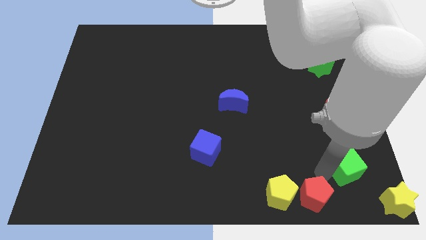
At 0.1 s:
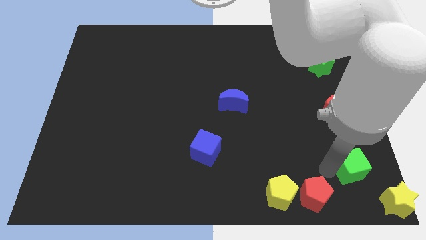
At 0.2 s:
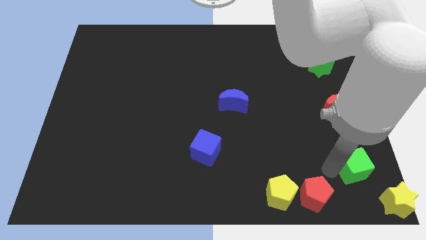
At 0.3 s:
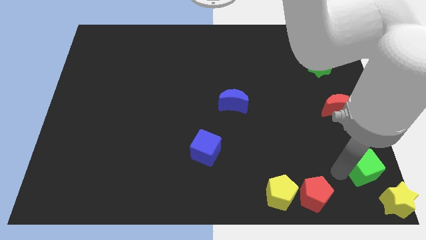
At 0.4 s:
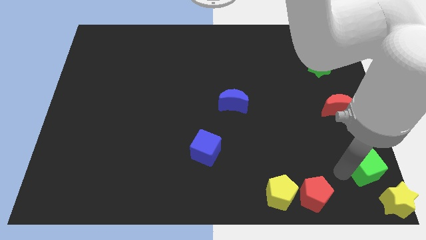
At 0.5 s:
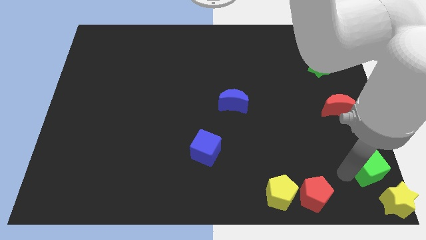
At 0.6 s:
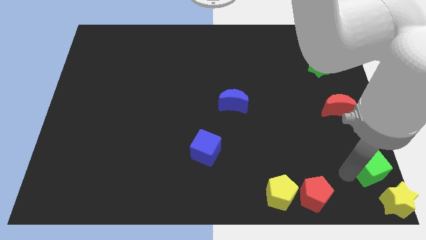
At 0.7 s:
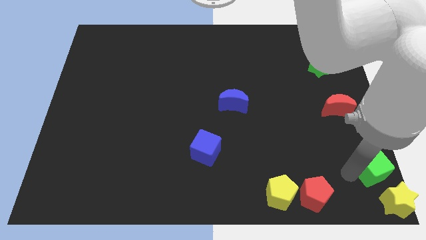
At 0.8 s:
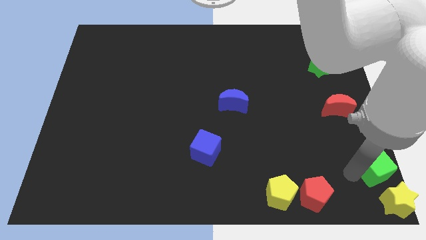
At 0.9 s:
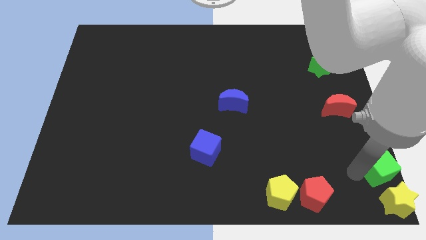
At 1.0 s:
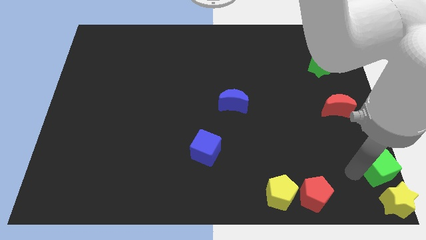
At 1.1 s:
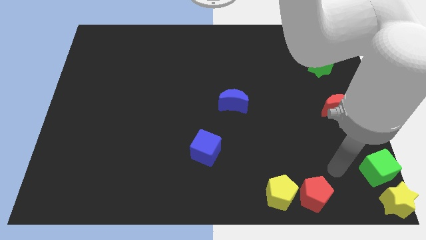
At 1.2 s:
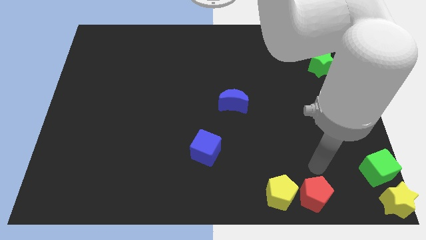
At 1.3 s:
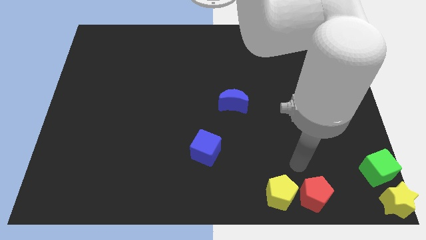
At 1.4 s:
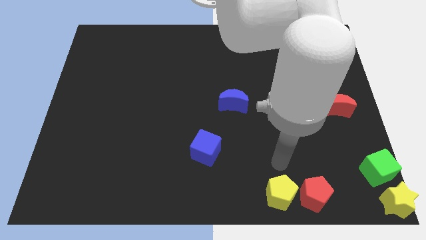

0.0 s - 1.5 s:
place the green cube above the yellow star

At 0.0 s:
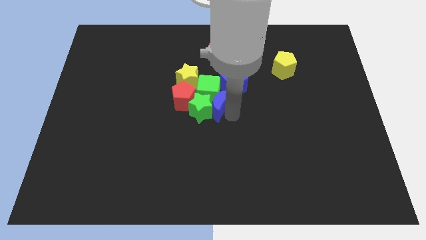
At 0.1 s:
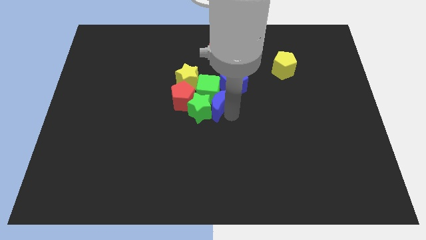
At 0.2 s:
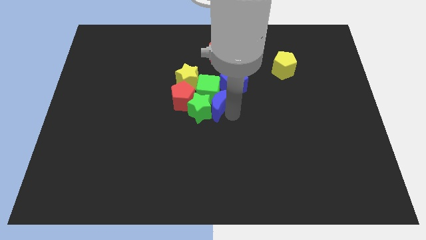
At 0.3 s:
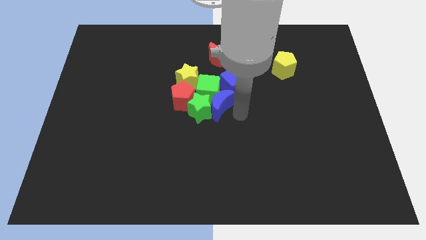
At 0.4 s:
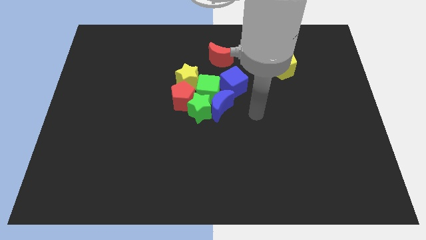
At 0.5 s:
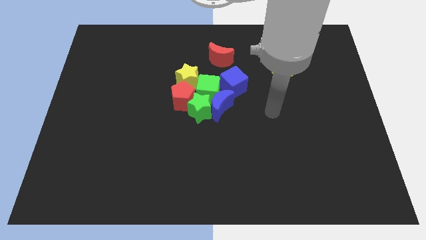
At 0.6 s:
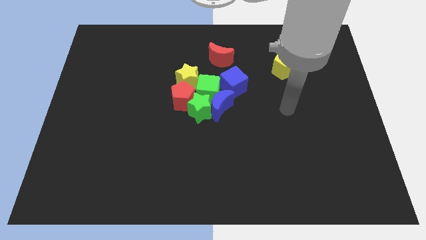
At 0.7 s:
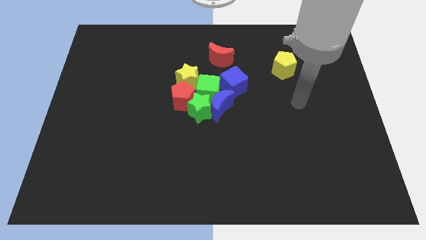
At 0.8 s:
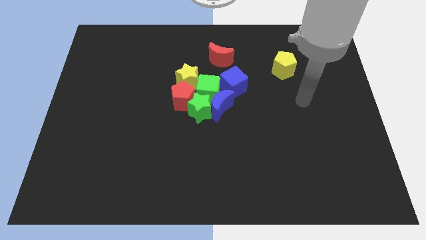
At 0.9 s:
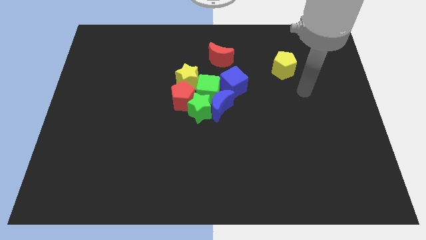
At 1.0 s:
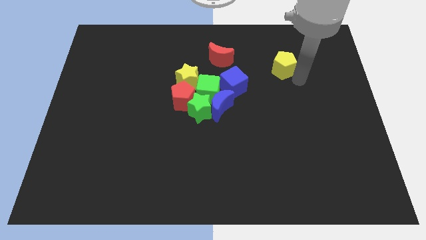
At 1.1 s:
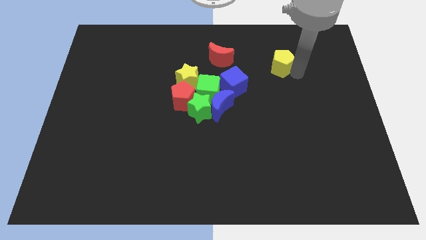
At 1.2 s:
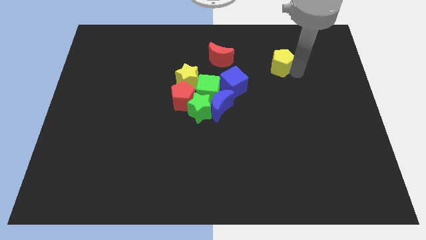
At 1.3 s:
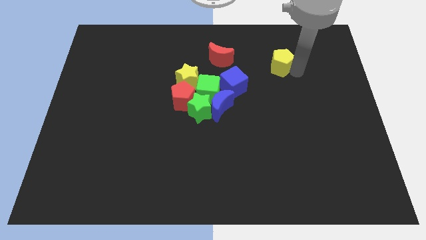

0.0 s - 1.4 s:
touch the bottom right of the yellow pentagon

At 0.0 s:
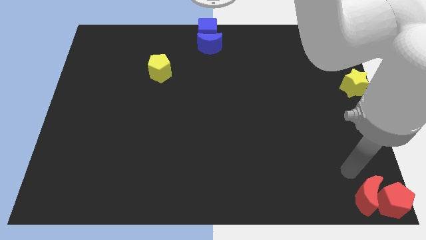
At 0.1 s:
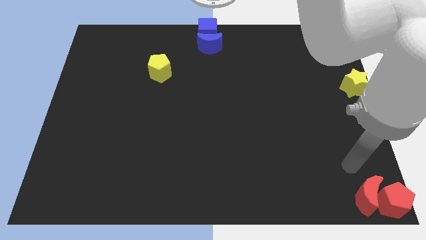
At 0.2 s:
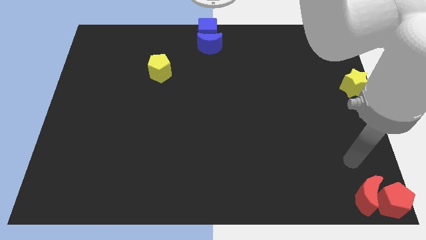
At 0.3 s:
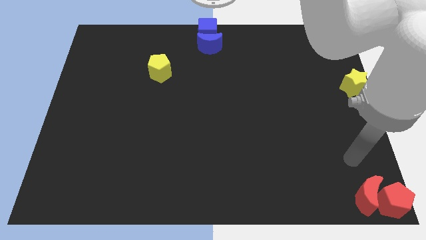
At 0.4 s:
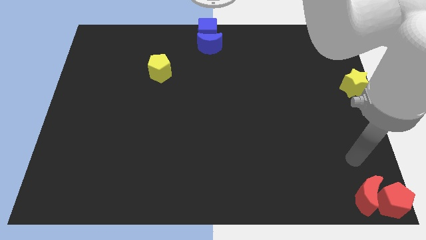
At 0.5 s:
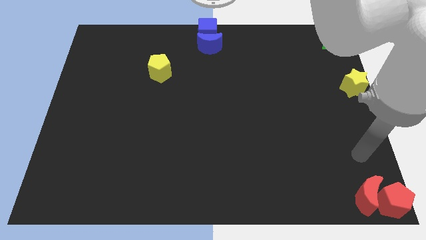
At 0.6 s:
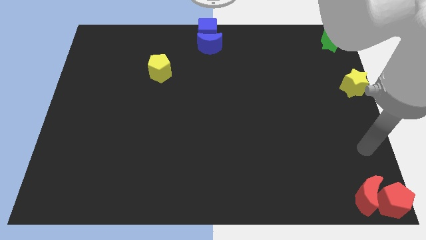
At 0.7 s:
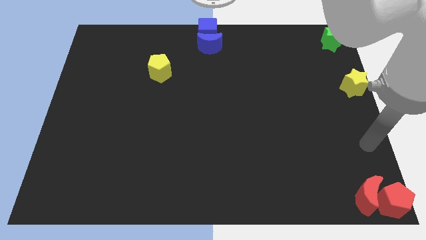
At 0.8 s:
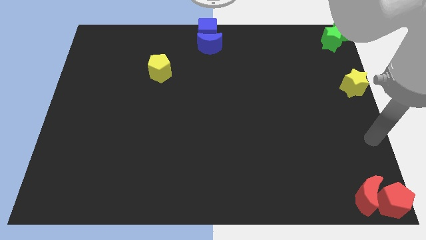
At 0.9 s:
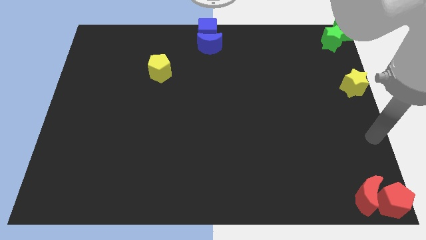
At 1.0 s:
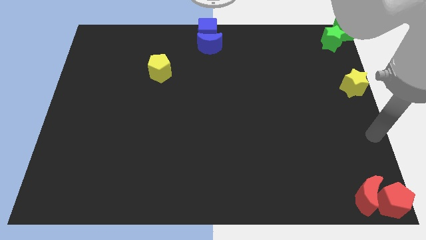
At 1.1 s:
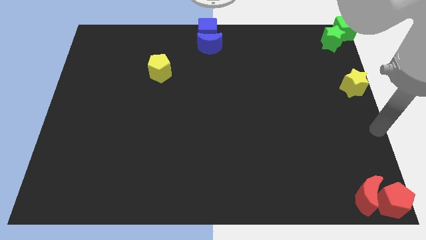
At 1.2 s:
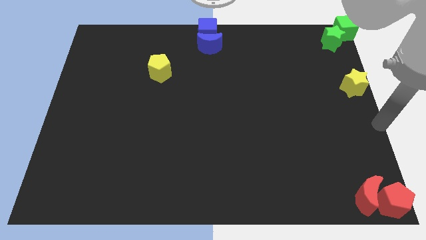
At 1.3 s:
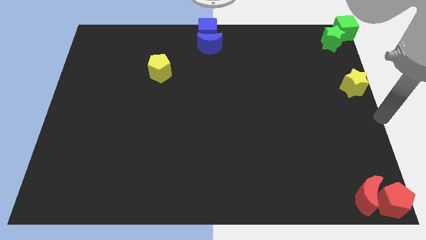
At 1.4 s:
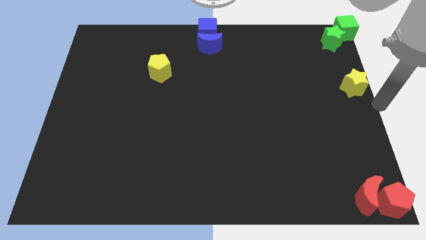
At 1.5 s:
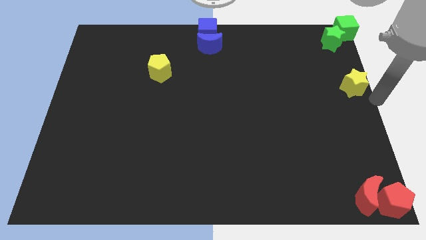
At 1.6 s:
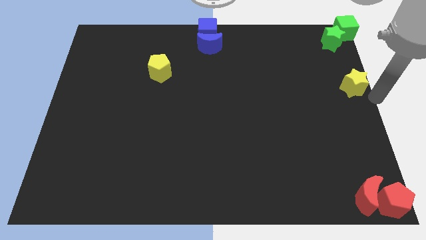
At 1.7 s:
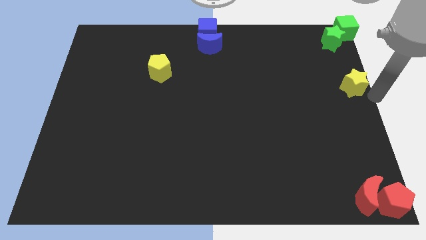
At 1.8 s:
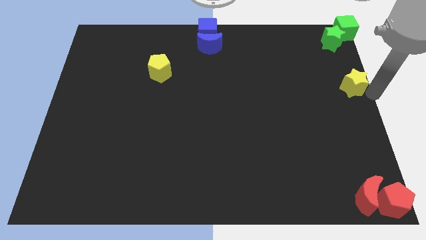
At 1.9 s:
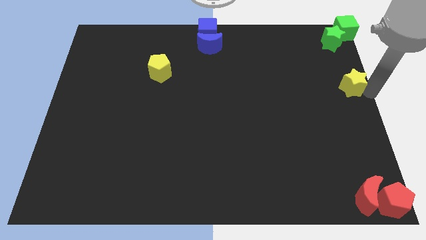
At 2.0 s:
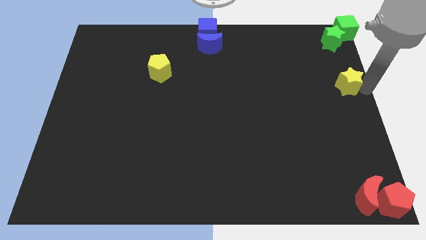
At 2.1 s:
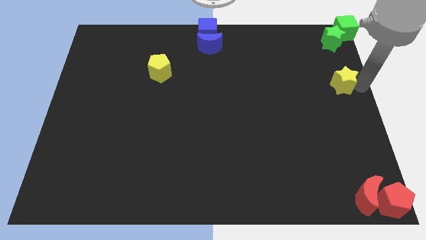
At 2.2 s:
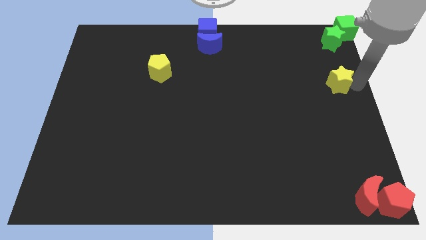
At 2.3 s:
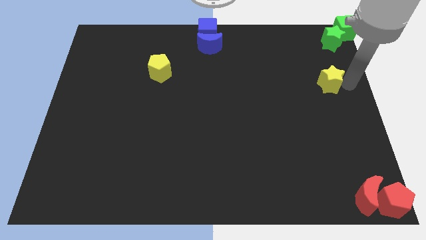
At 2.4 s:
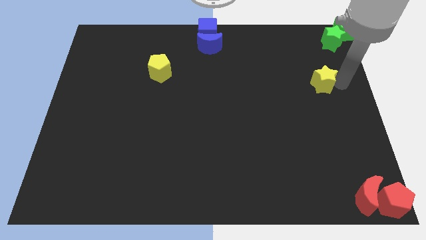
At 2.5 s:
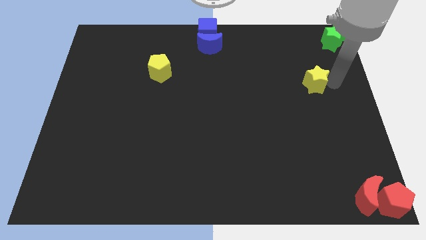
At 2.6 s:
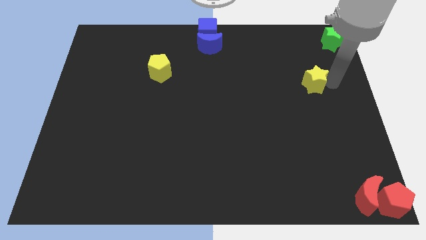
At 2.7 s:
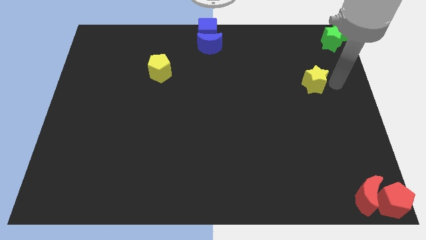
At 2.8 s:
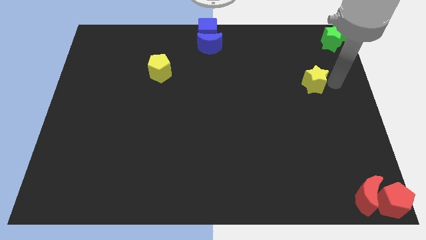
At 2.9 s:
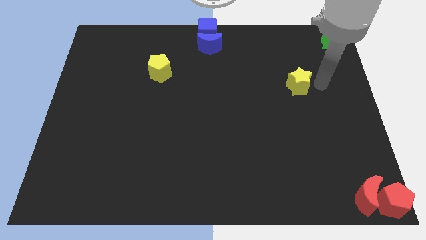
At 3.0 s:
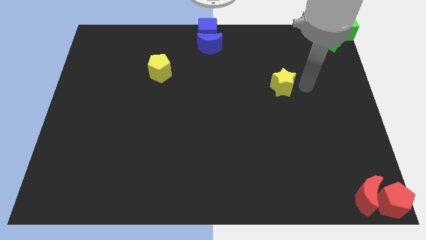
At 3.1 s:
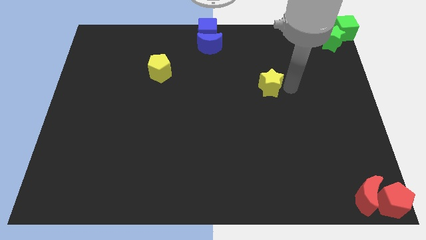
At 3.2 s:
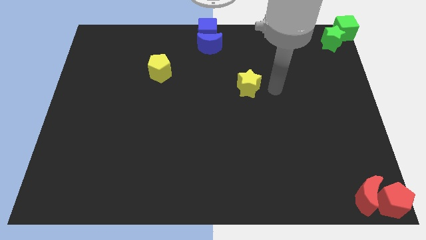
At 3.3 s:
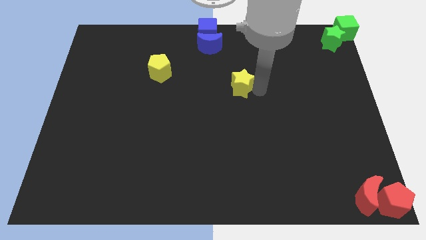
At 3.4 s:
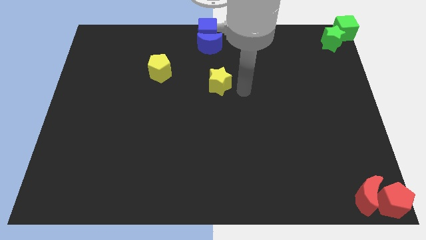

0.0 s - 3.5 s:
put the yellow star center of the board

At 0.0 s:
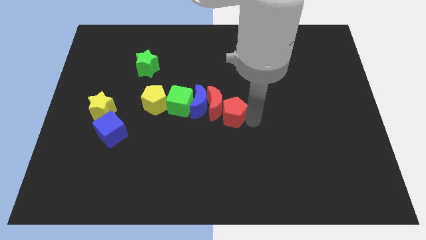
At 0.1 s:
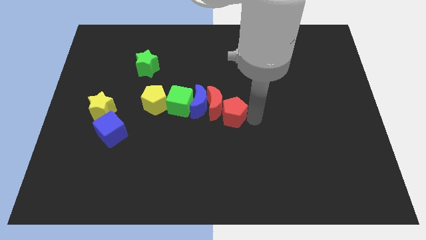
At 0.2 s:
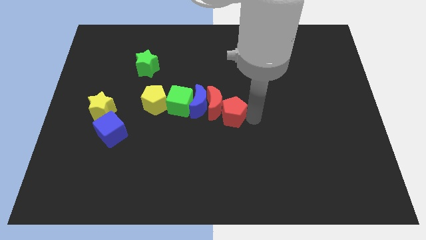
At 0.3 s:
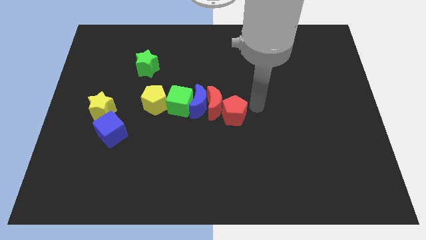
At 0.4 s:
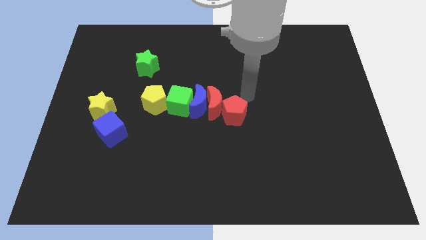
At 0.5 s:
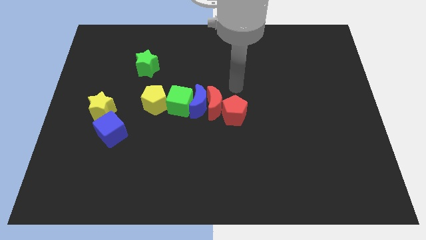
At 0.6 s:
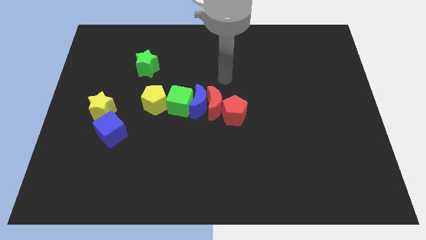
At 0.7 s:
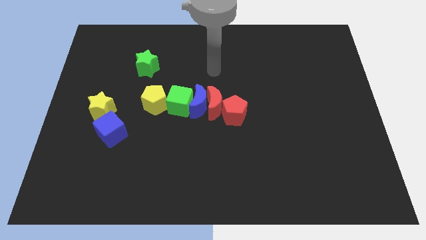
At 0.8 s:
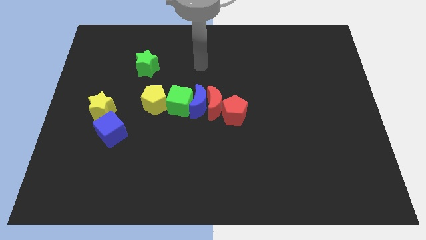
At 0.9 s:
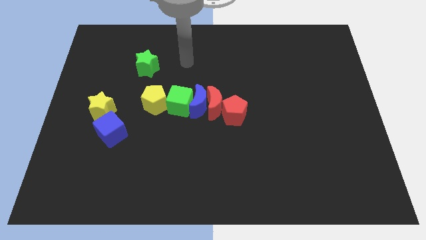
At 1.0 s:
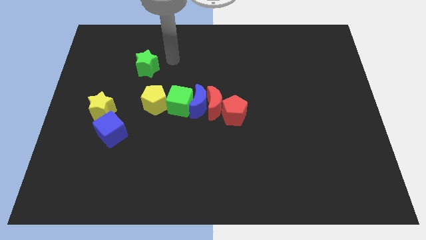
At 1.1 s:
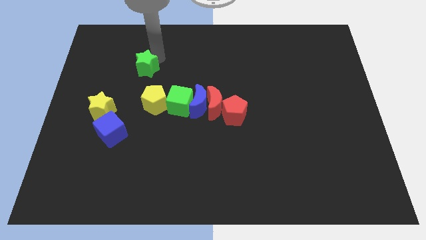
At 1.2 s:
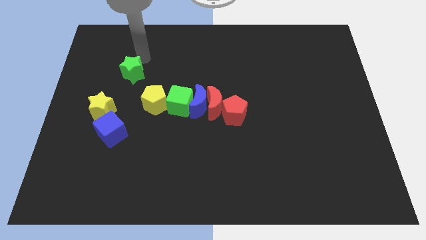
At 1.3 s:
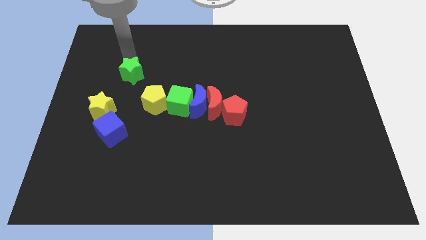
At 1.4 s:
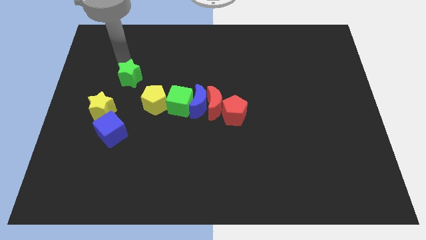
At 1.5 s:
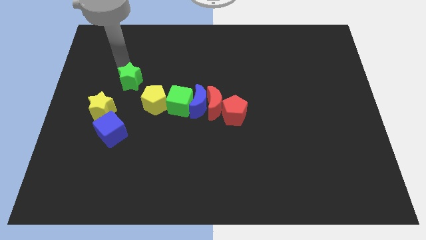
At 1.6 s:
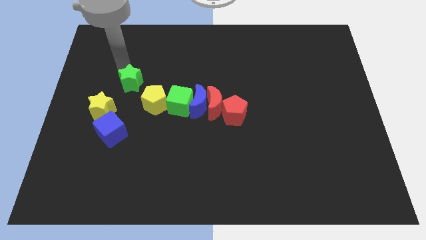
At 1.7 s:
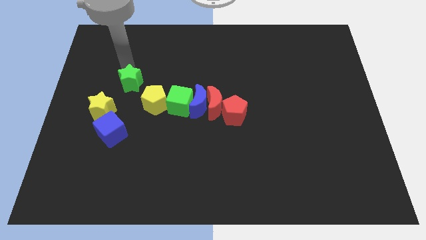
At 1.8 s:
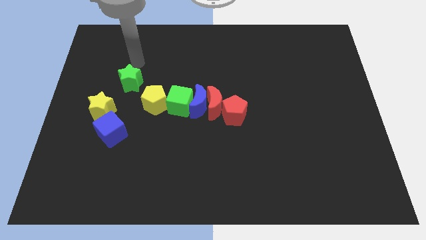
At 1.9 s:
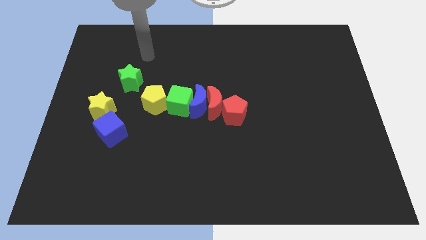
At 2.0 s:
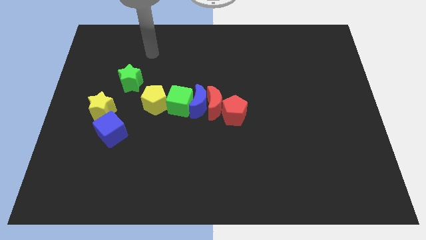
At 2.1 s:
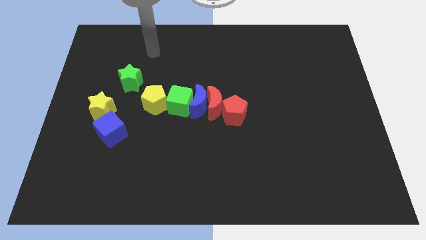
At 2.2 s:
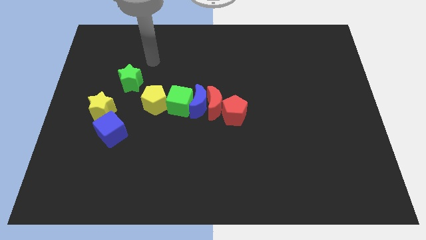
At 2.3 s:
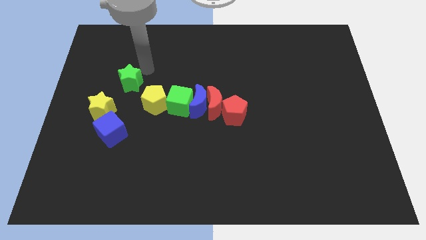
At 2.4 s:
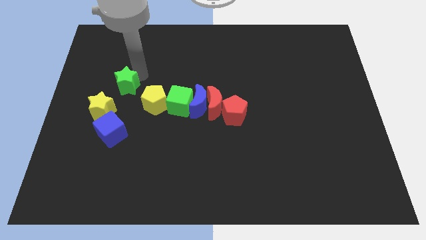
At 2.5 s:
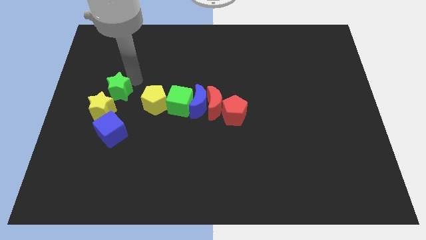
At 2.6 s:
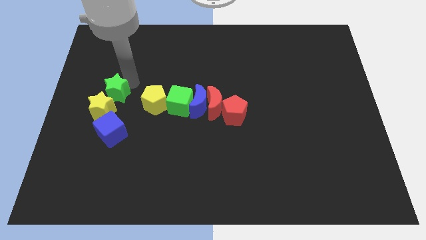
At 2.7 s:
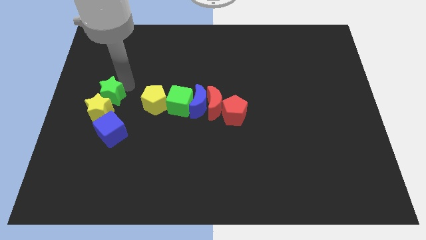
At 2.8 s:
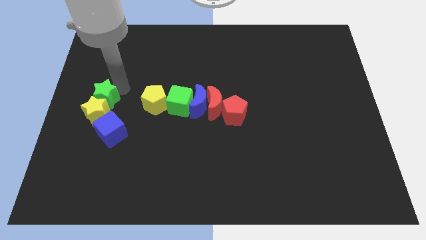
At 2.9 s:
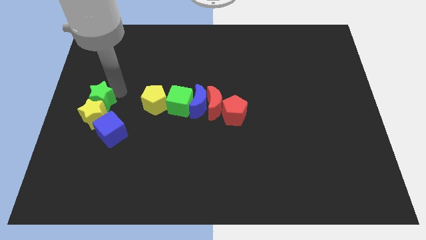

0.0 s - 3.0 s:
place green star to the left of yellow pentagon
